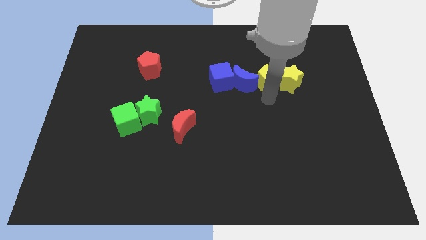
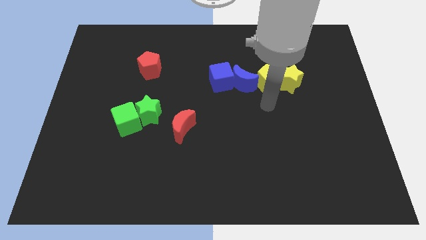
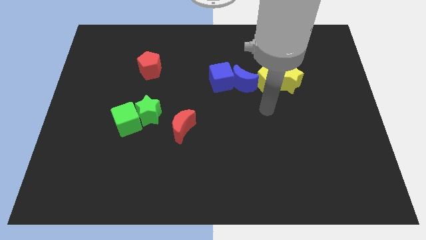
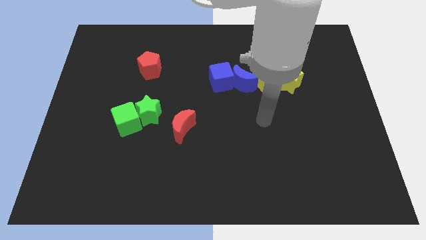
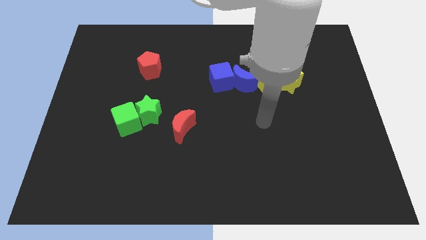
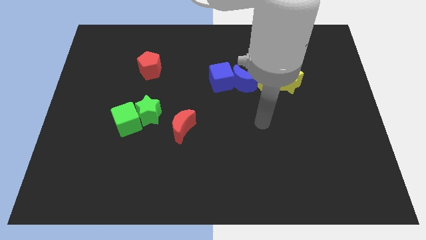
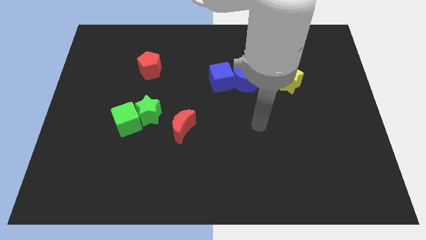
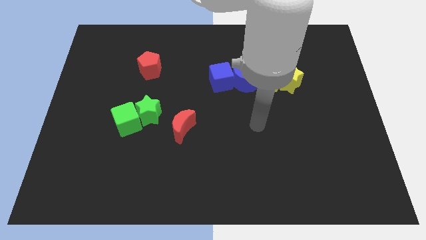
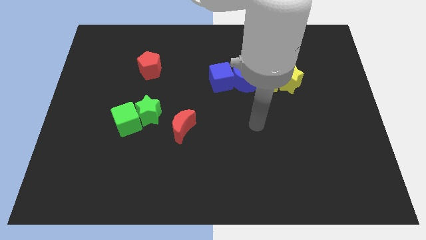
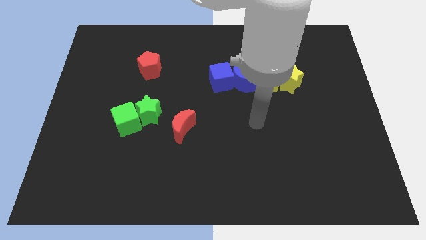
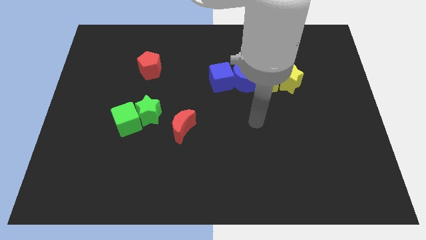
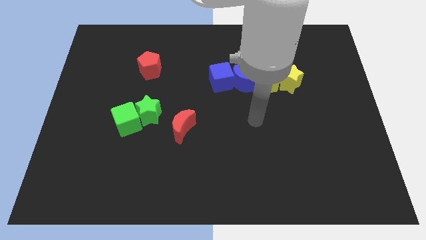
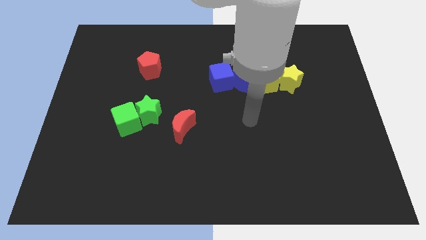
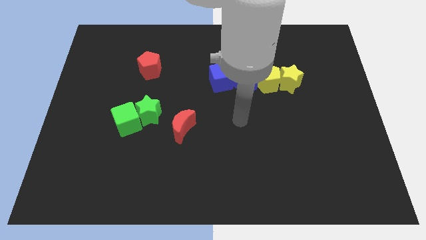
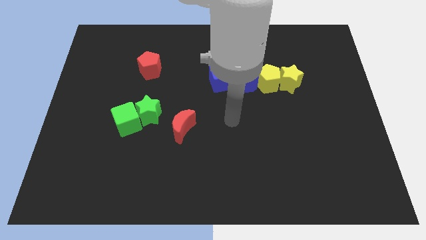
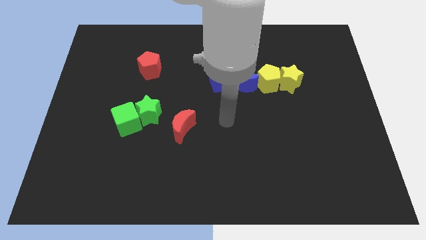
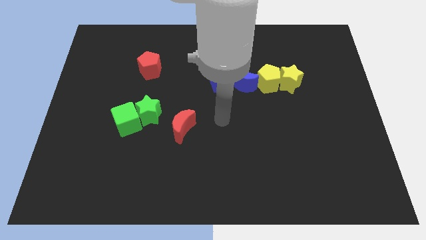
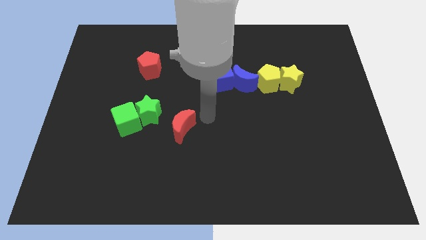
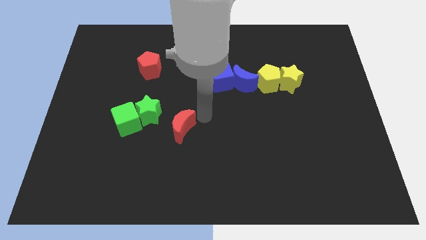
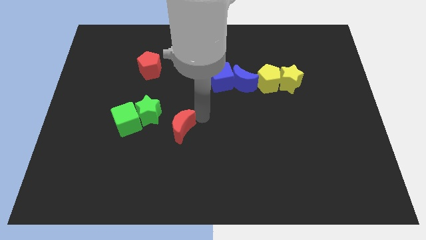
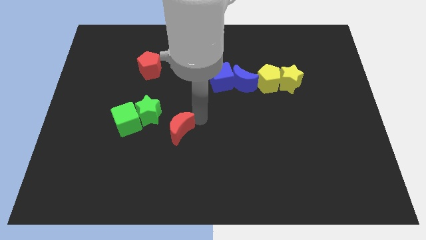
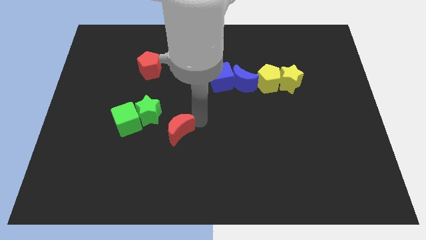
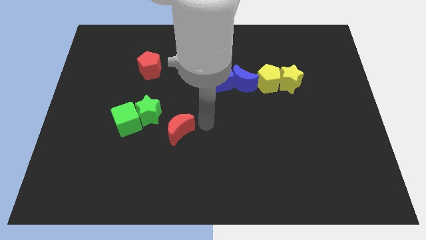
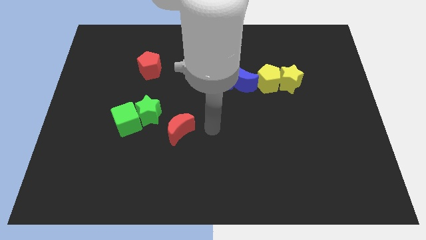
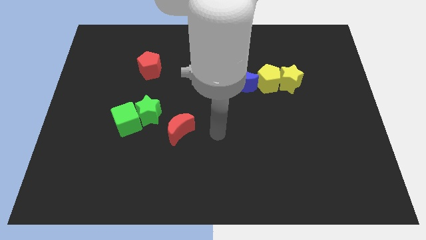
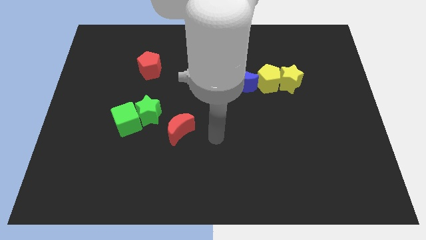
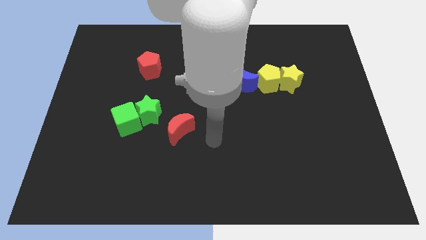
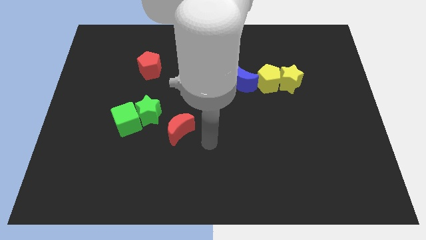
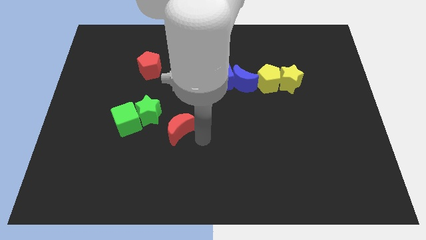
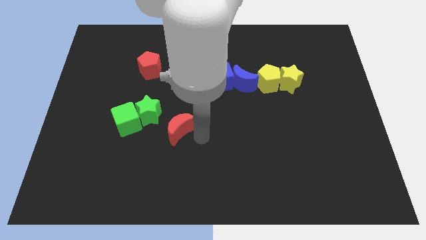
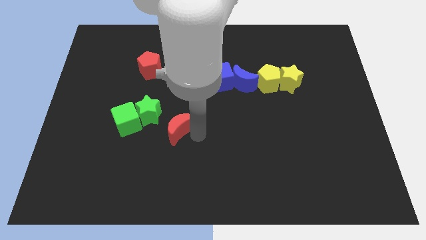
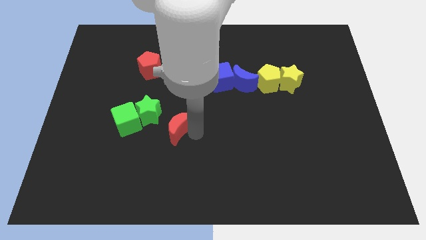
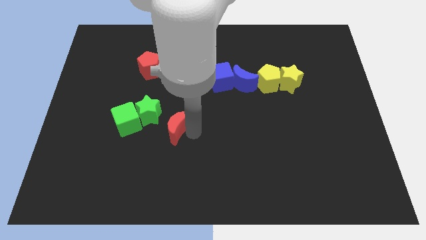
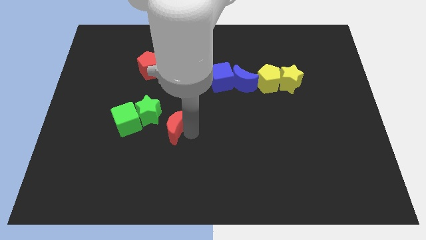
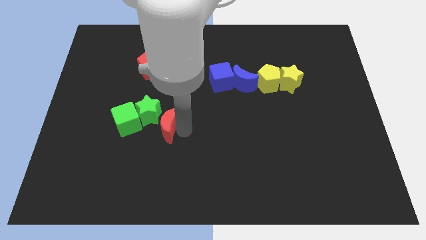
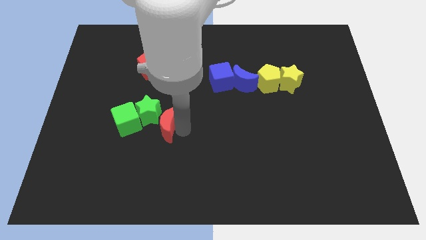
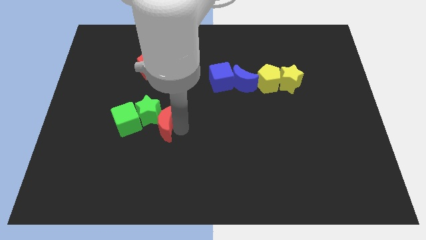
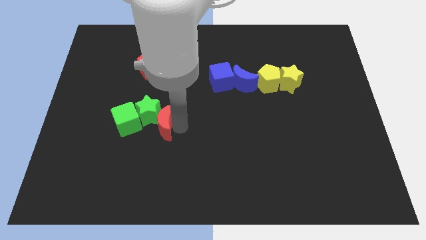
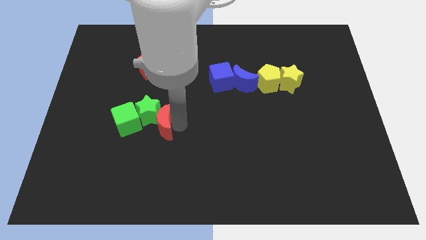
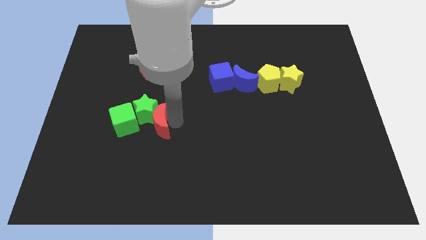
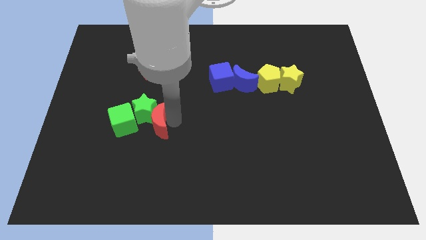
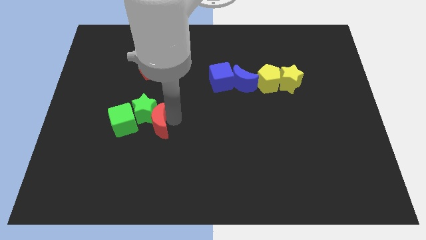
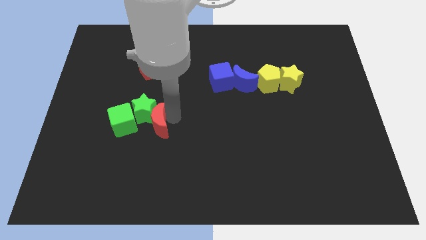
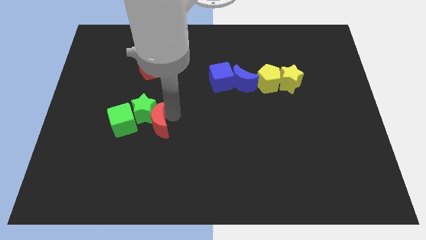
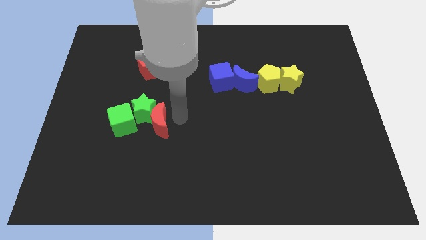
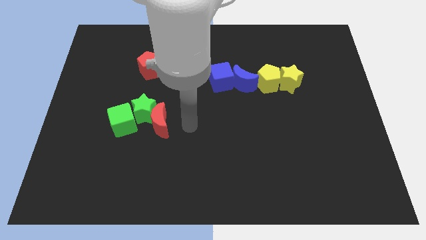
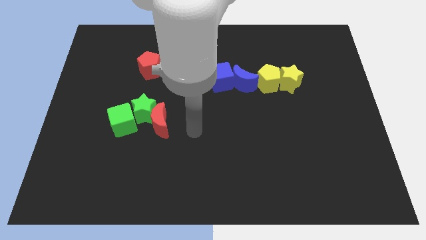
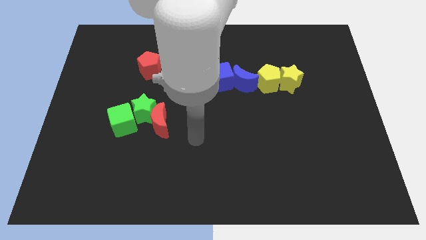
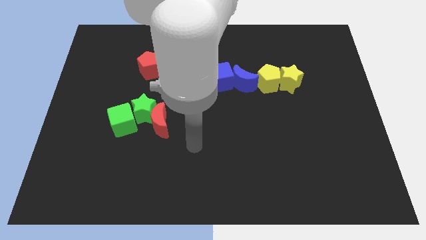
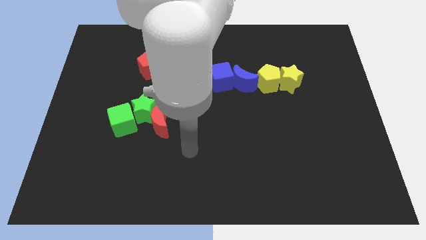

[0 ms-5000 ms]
move red moon into the green star

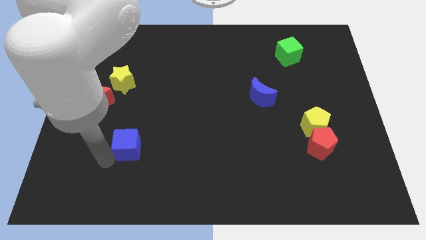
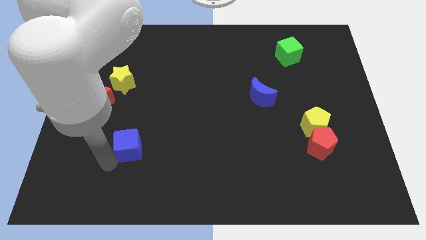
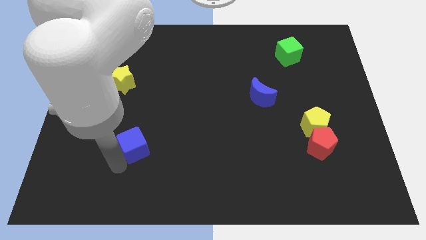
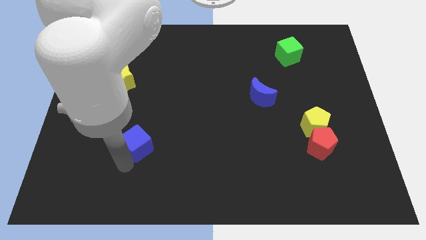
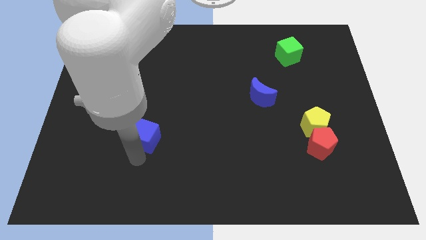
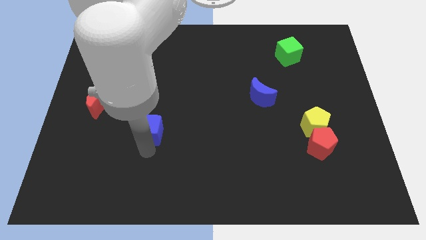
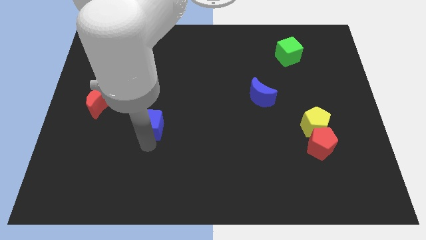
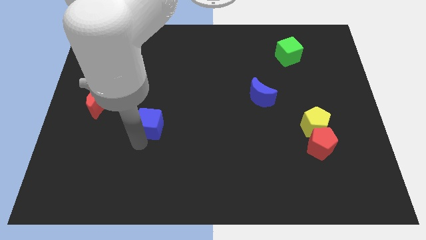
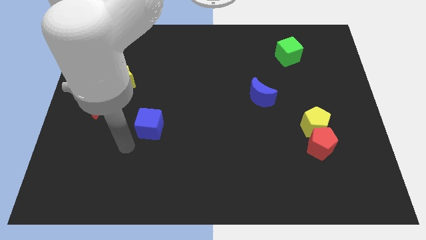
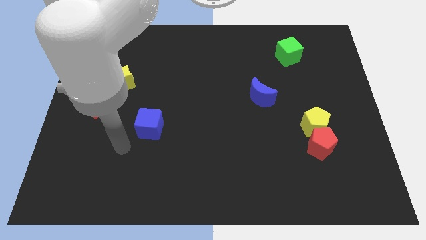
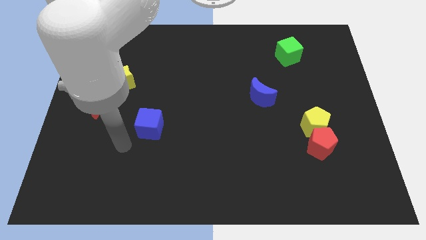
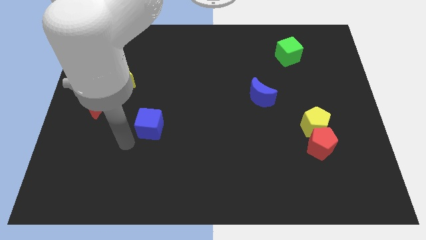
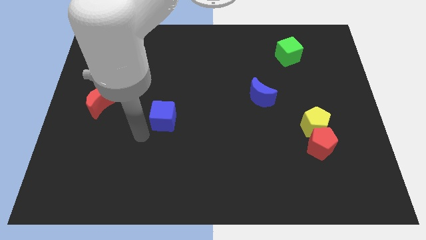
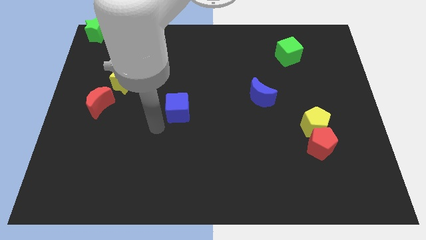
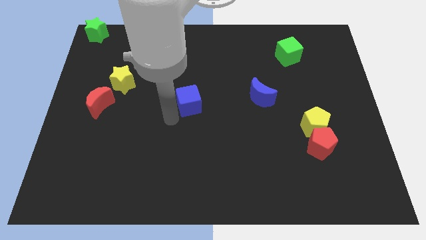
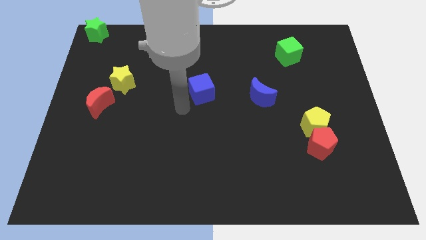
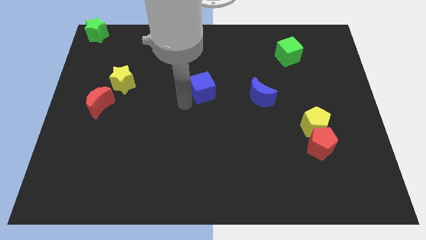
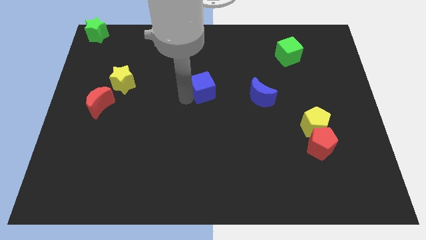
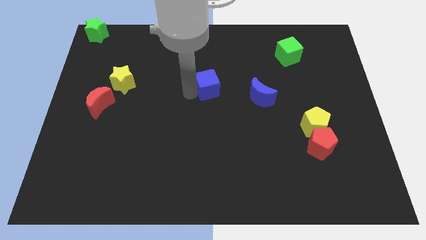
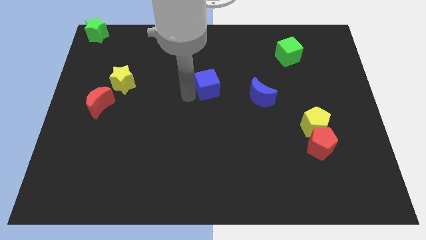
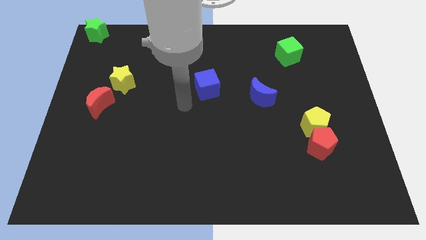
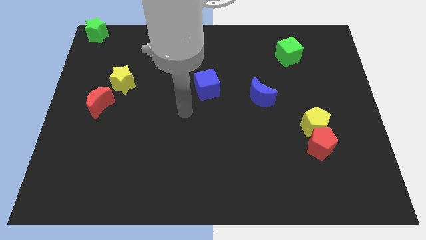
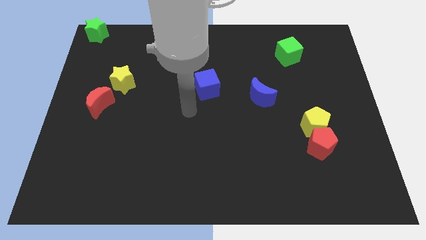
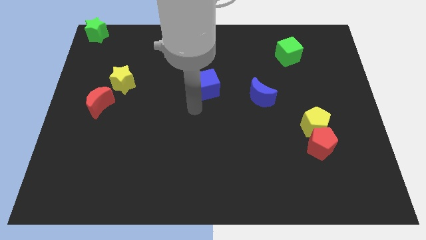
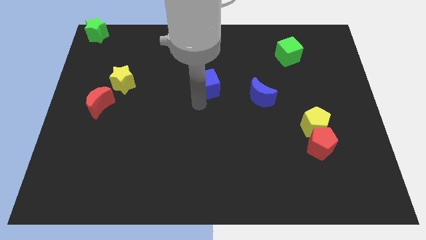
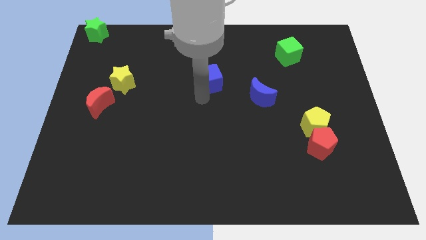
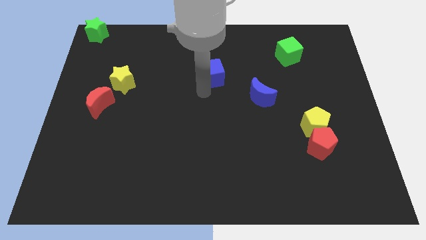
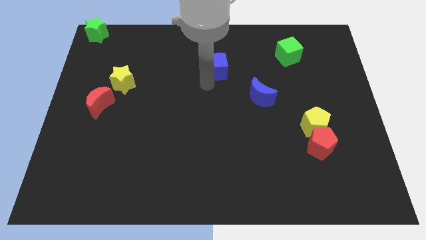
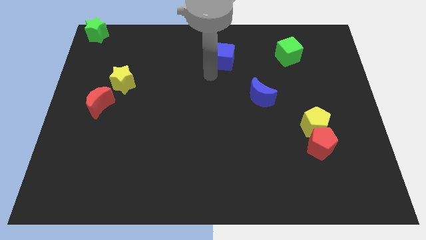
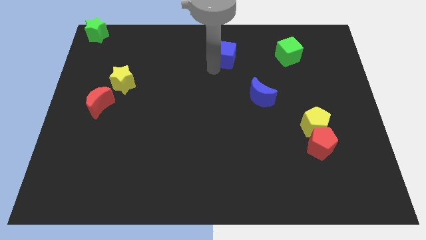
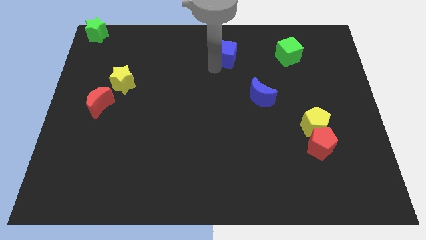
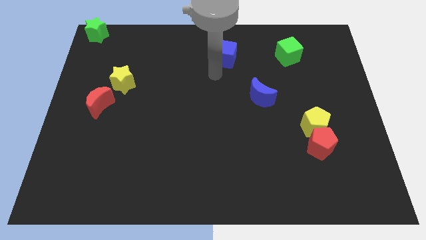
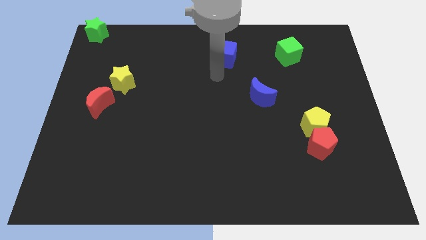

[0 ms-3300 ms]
place the blue cube to the left of the green cube

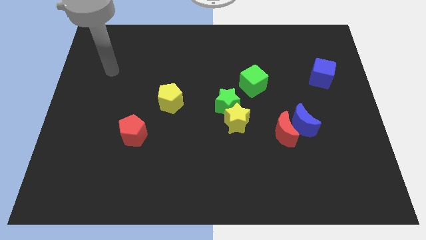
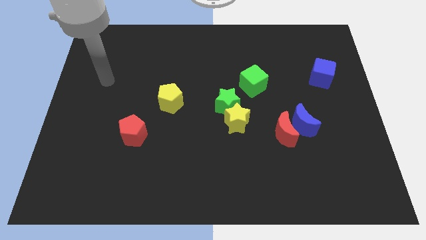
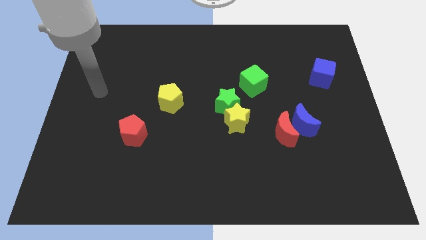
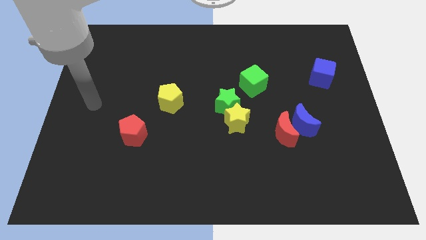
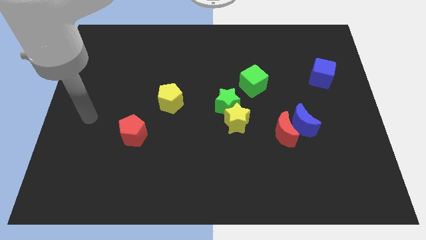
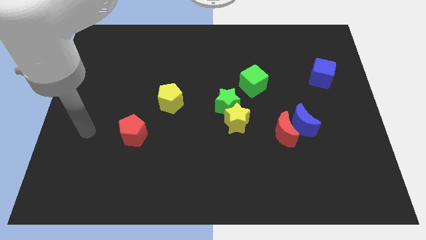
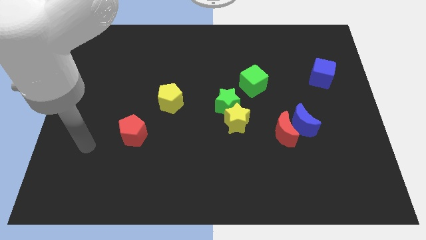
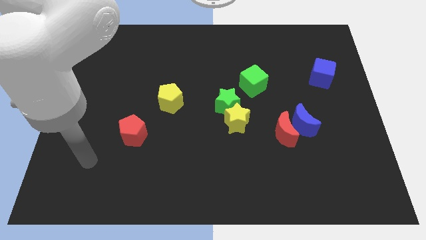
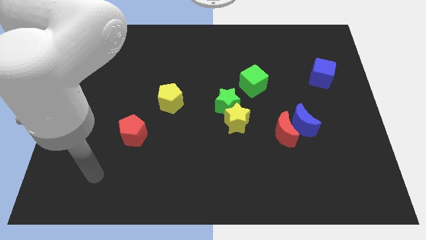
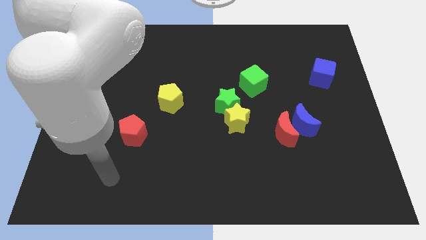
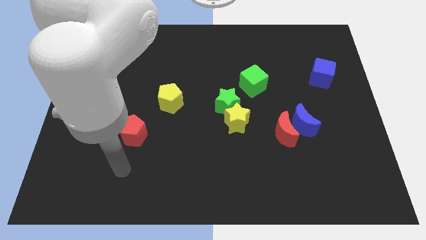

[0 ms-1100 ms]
slide your arm below the red pentagon
